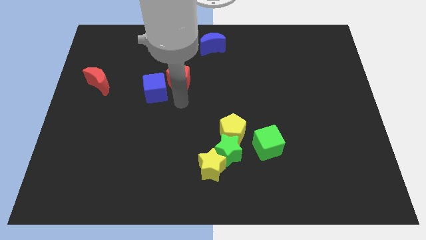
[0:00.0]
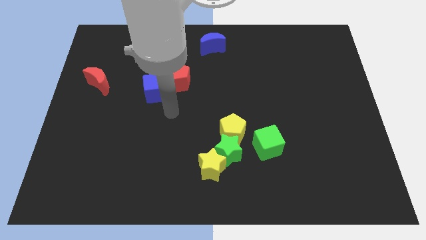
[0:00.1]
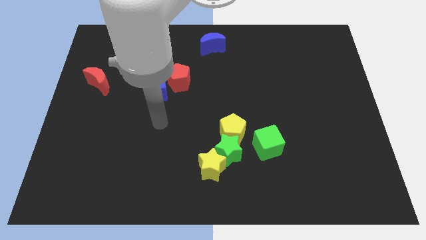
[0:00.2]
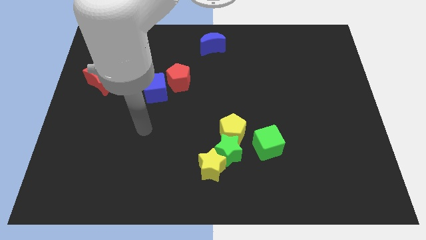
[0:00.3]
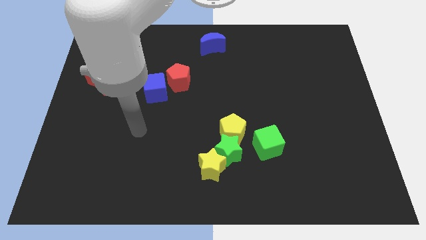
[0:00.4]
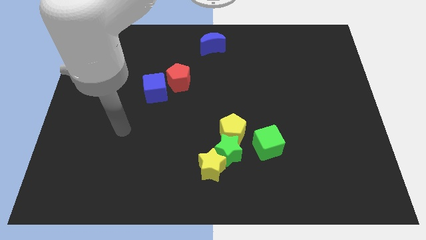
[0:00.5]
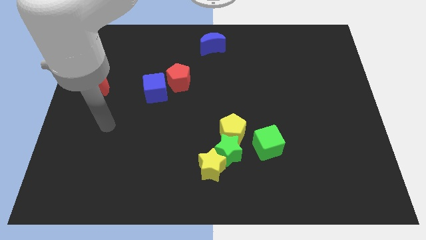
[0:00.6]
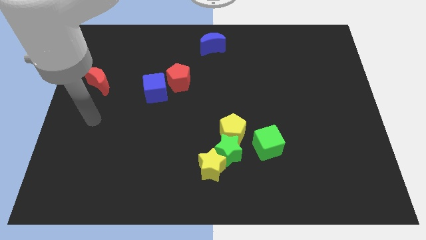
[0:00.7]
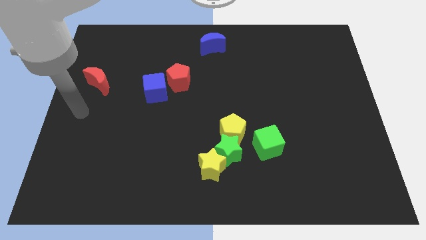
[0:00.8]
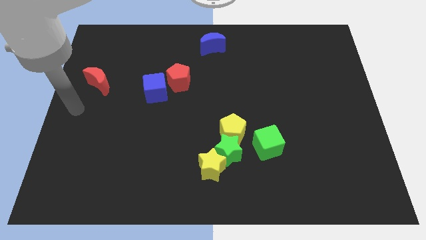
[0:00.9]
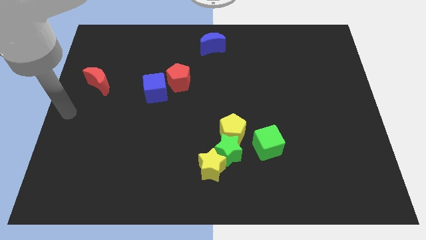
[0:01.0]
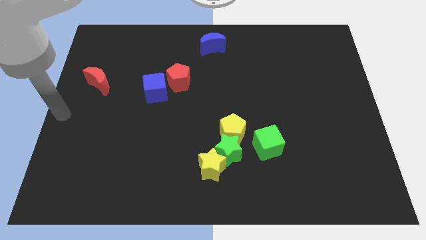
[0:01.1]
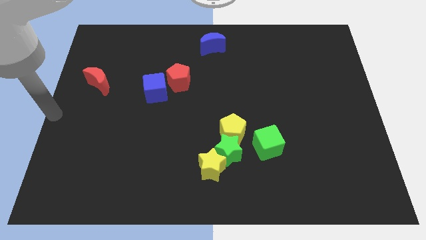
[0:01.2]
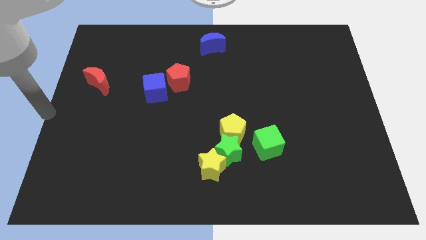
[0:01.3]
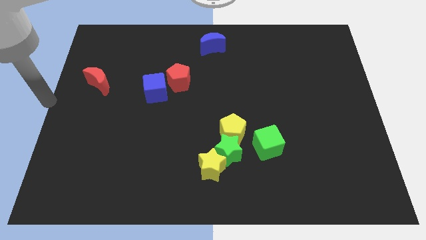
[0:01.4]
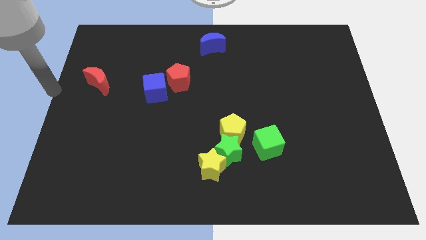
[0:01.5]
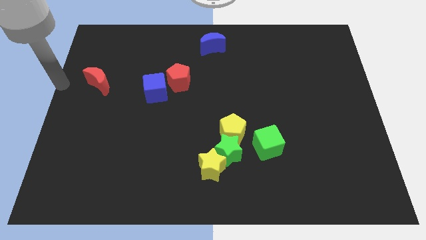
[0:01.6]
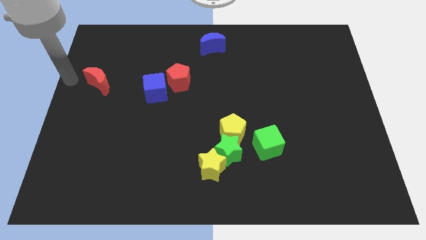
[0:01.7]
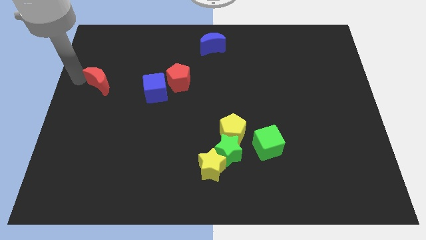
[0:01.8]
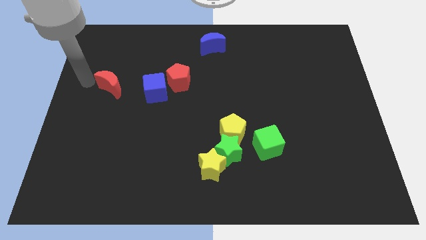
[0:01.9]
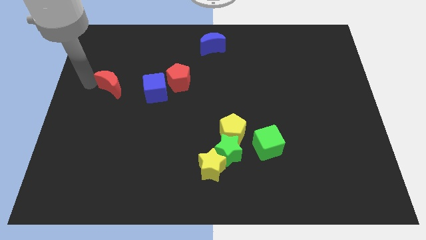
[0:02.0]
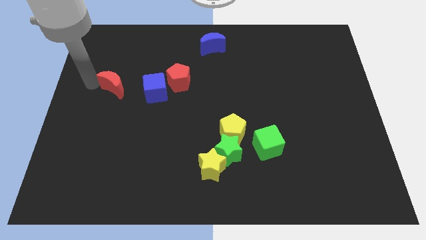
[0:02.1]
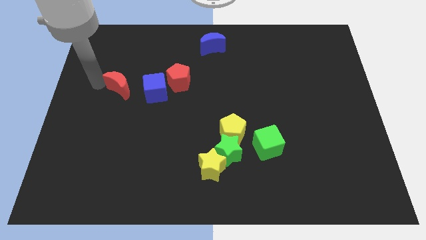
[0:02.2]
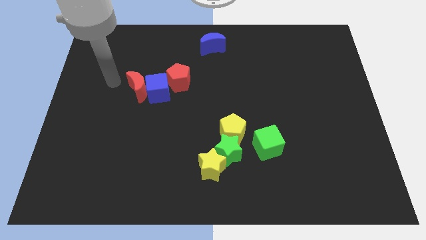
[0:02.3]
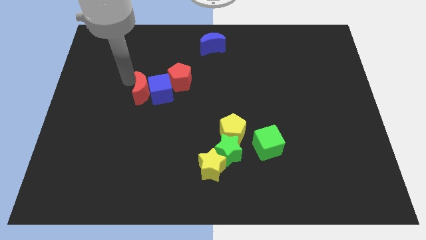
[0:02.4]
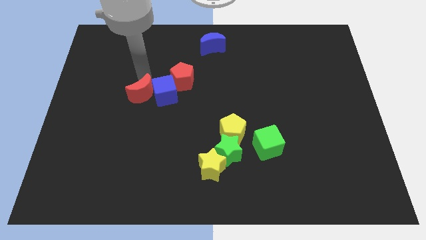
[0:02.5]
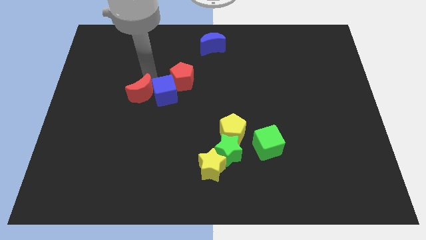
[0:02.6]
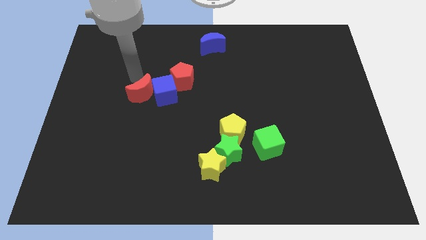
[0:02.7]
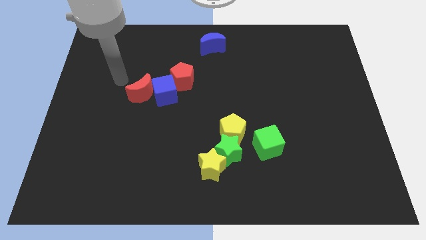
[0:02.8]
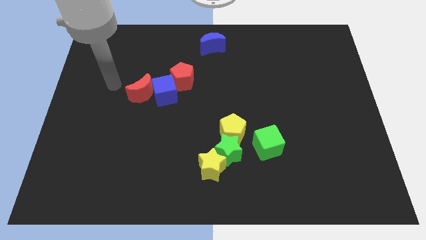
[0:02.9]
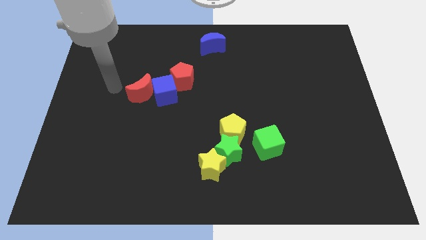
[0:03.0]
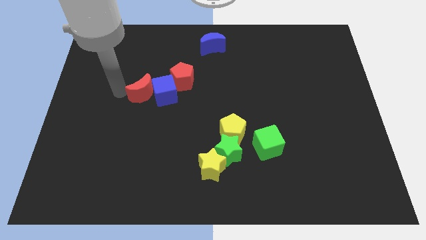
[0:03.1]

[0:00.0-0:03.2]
push red moon into the blue cube

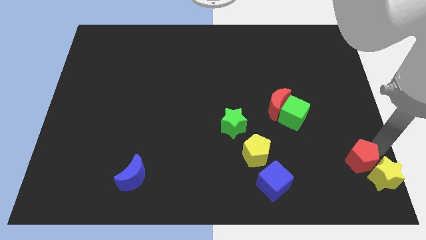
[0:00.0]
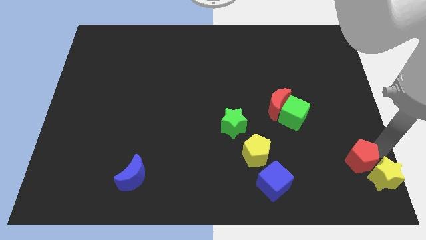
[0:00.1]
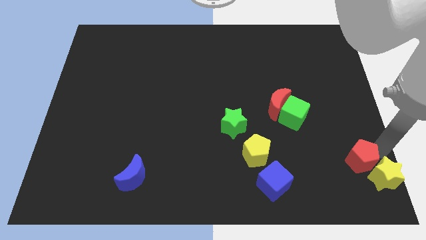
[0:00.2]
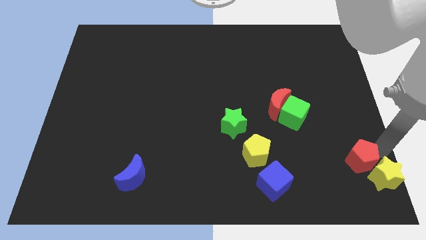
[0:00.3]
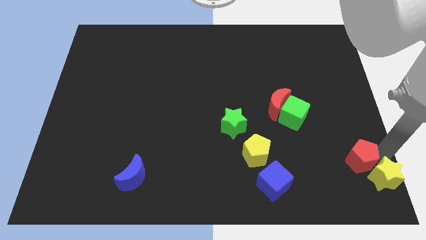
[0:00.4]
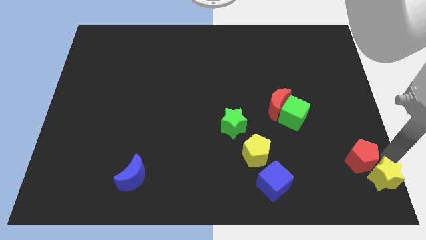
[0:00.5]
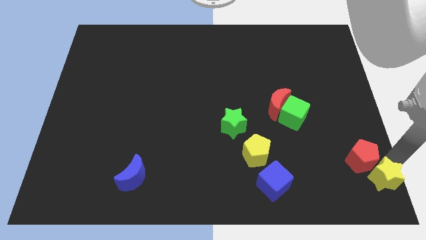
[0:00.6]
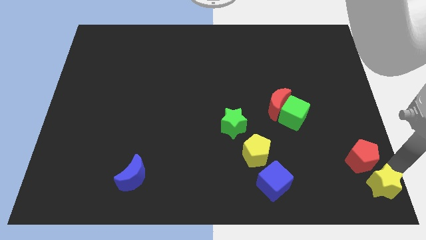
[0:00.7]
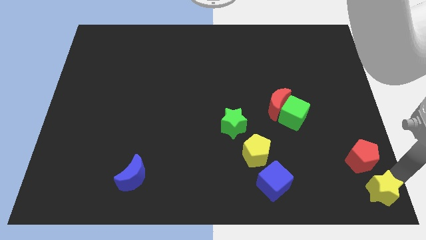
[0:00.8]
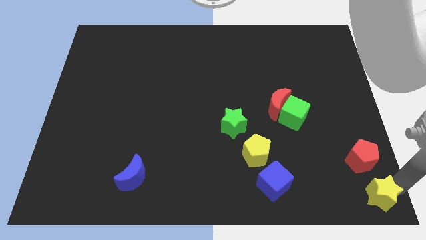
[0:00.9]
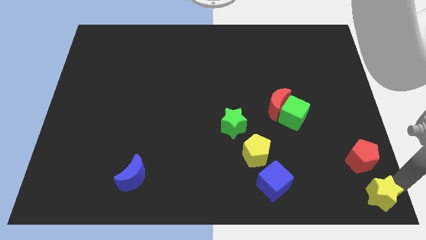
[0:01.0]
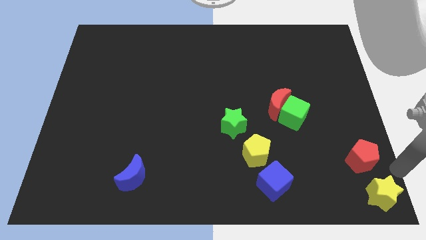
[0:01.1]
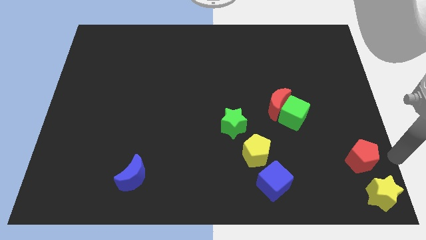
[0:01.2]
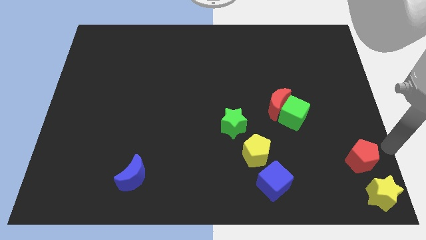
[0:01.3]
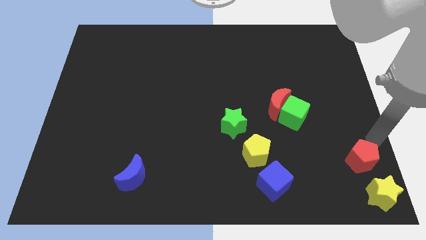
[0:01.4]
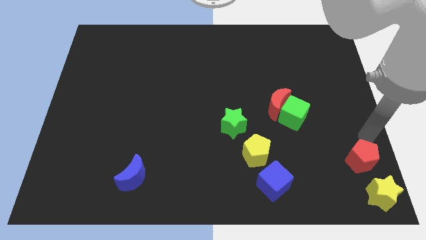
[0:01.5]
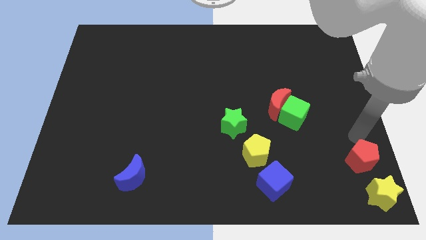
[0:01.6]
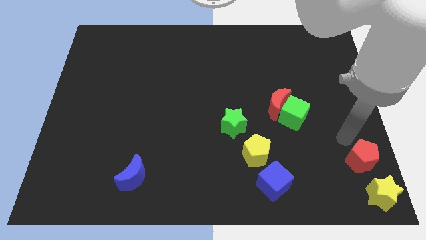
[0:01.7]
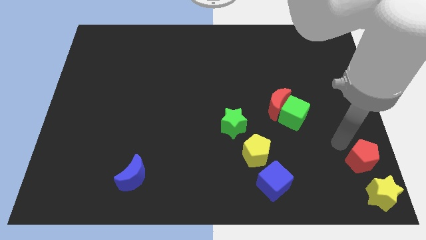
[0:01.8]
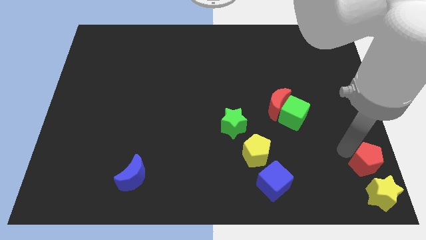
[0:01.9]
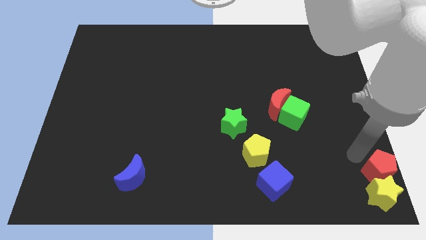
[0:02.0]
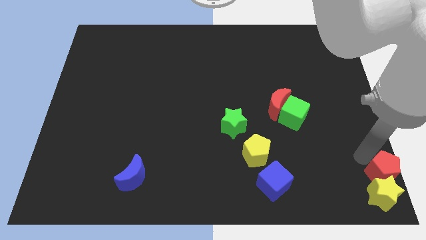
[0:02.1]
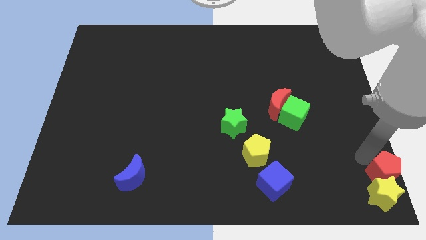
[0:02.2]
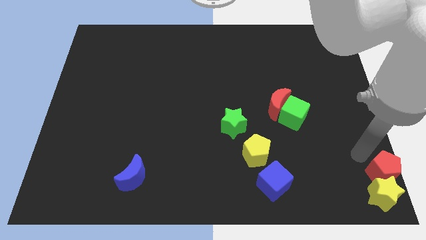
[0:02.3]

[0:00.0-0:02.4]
push the yellow star and red pentagon towards the bottom right corner of the board

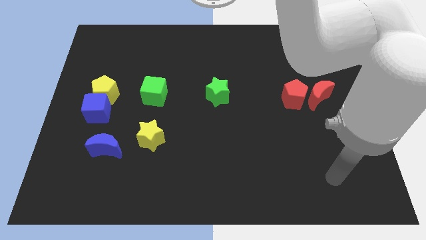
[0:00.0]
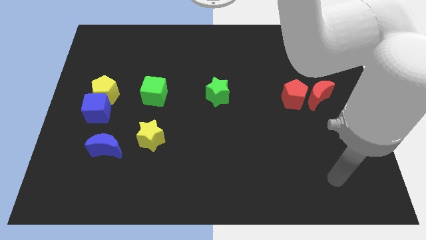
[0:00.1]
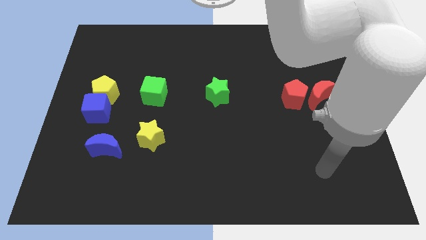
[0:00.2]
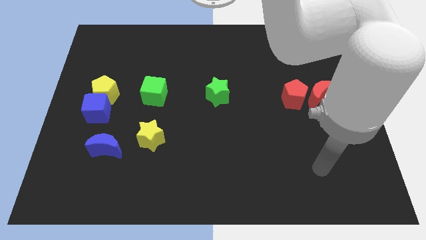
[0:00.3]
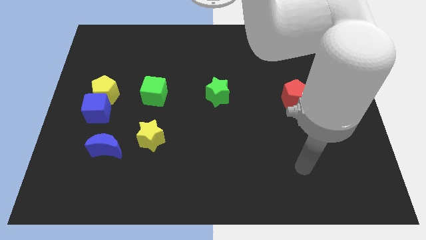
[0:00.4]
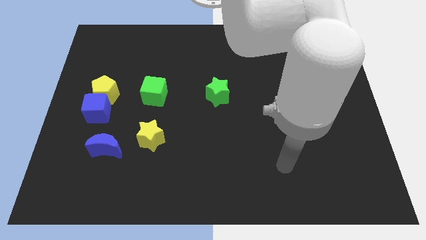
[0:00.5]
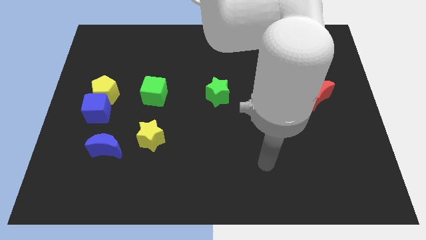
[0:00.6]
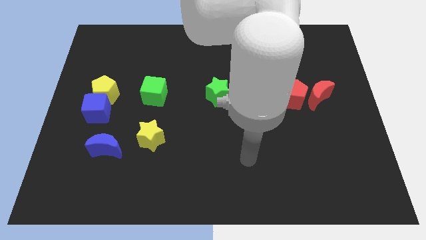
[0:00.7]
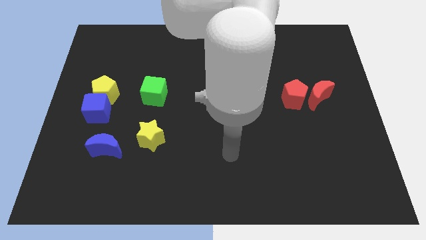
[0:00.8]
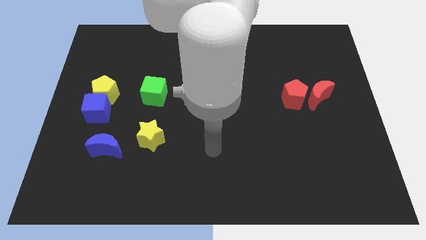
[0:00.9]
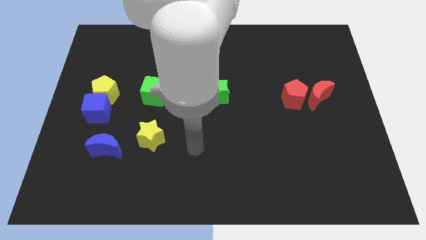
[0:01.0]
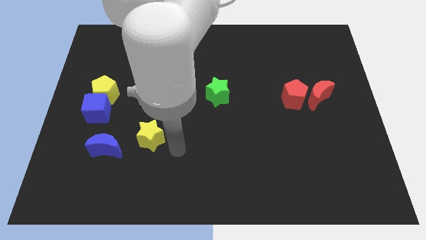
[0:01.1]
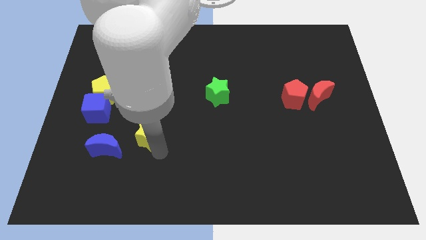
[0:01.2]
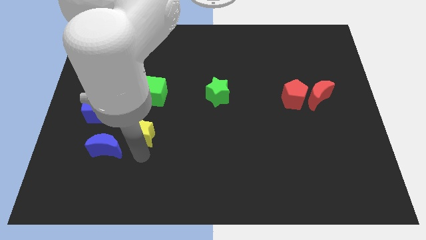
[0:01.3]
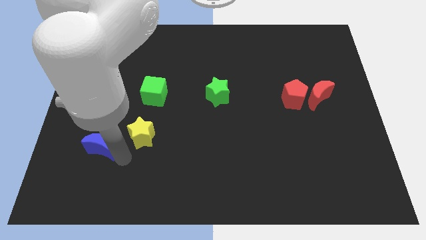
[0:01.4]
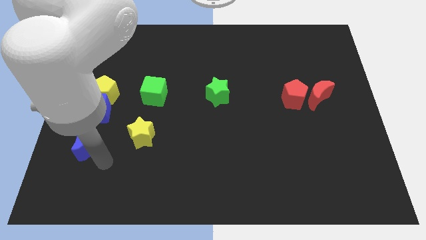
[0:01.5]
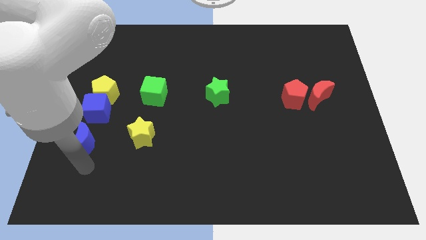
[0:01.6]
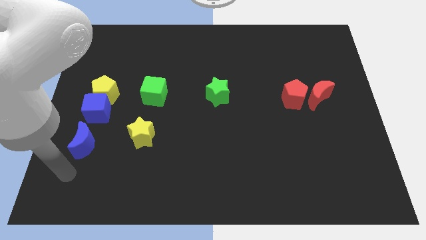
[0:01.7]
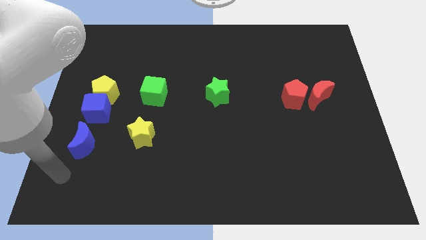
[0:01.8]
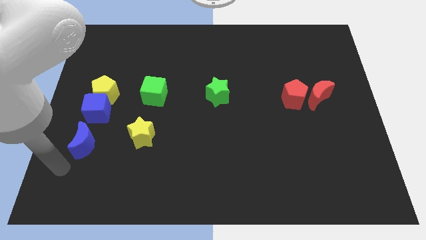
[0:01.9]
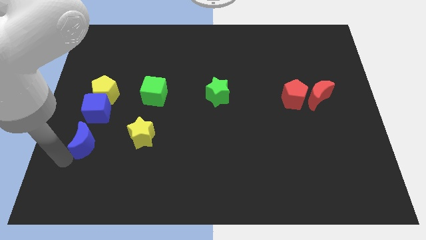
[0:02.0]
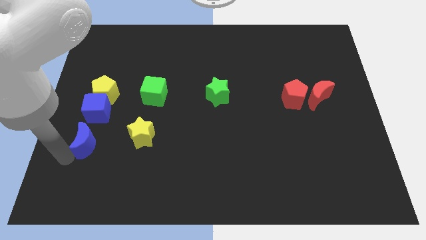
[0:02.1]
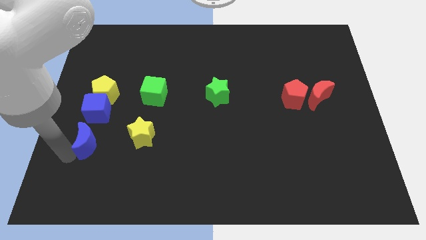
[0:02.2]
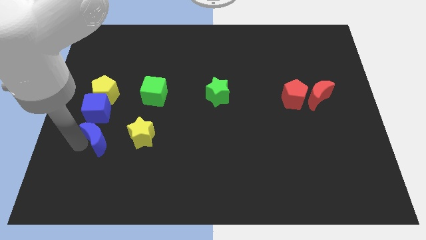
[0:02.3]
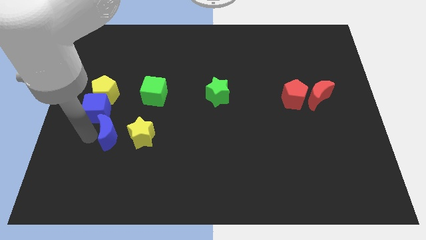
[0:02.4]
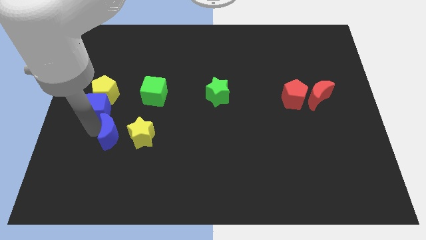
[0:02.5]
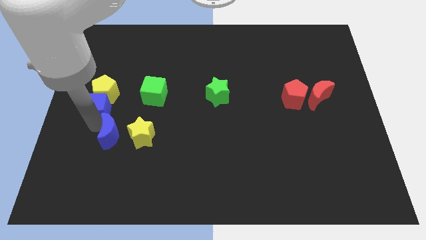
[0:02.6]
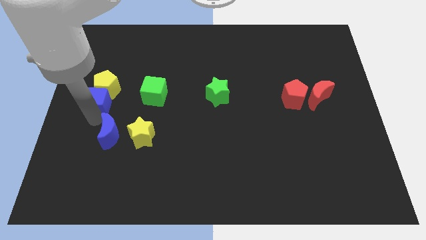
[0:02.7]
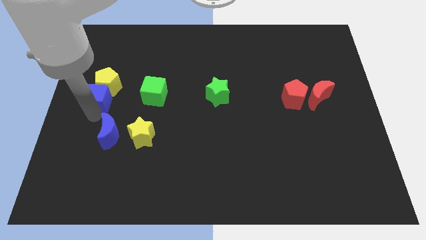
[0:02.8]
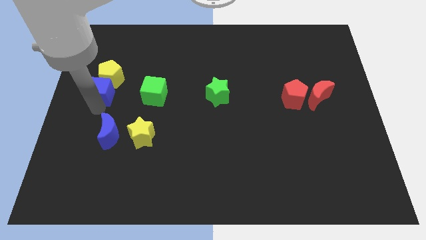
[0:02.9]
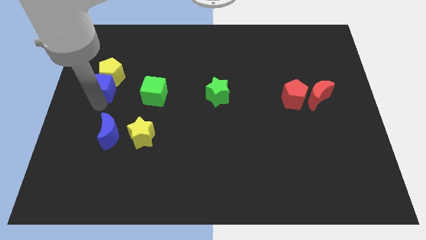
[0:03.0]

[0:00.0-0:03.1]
move blue cube close to the yellow pentagon

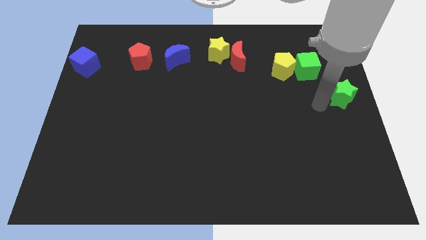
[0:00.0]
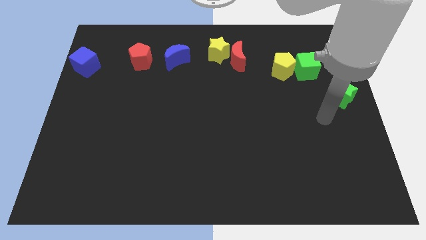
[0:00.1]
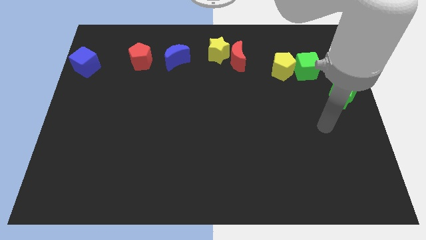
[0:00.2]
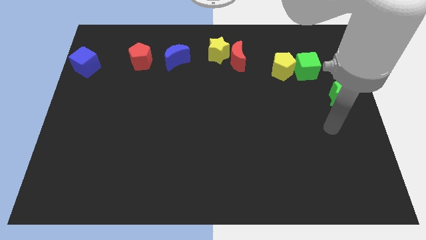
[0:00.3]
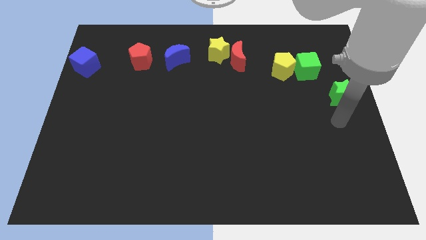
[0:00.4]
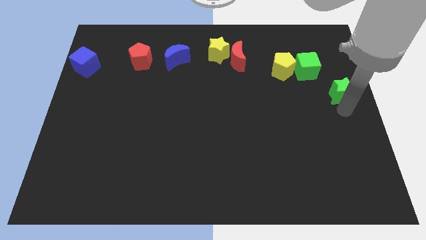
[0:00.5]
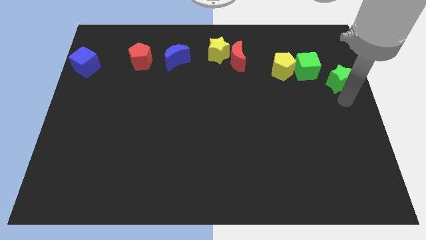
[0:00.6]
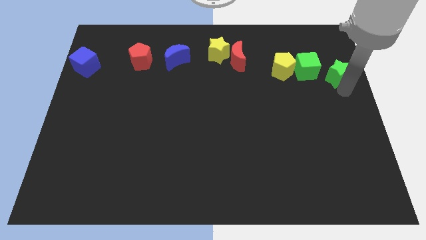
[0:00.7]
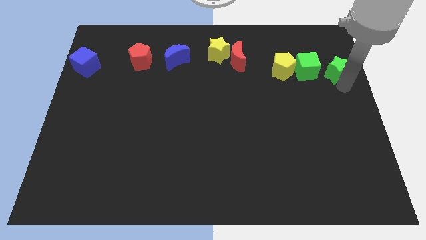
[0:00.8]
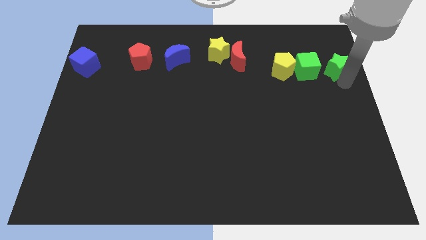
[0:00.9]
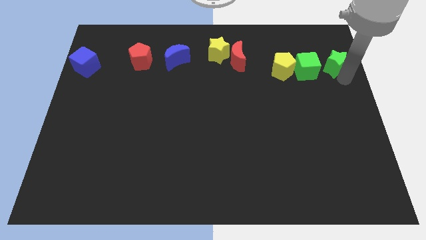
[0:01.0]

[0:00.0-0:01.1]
push the green star right to the green cube
